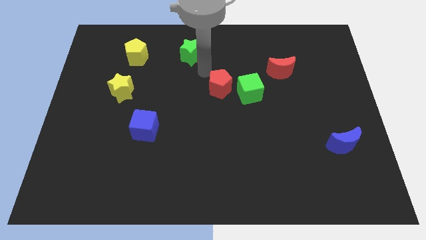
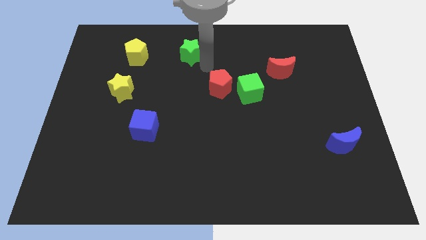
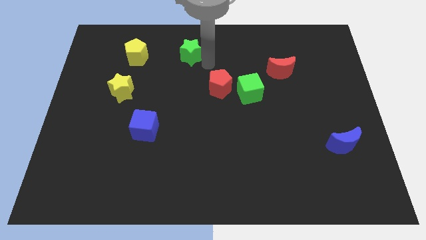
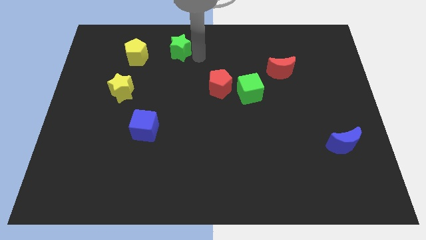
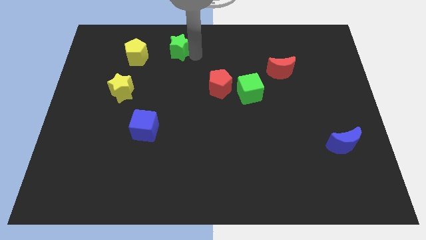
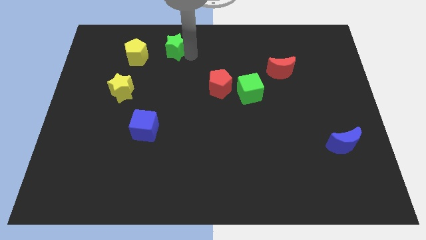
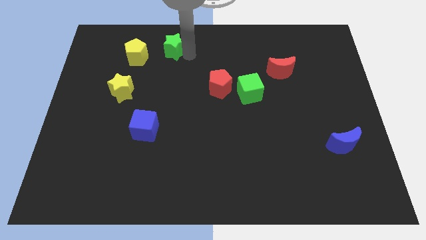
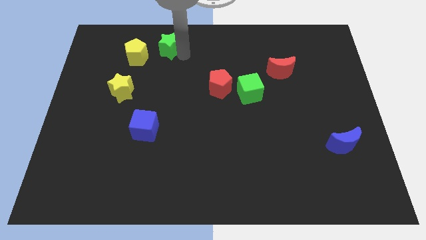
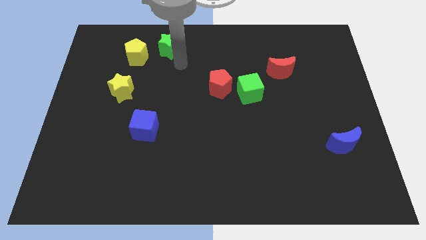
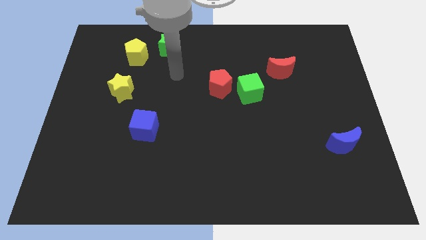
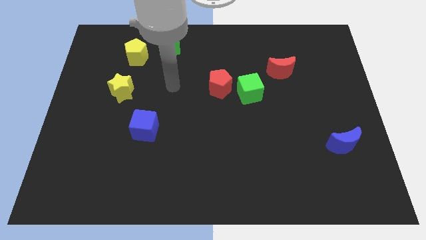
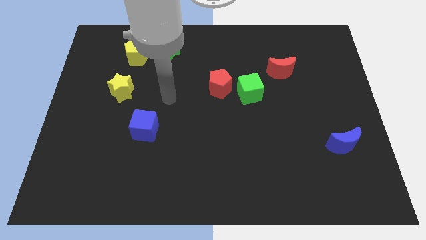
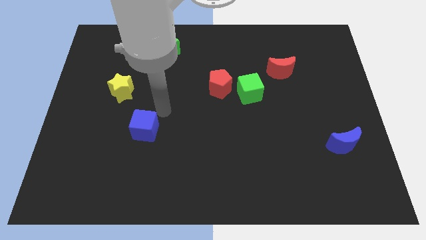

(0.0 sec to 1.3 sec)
push the green star parallel to the yellow pentagon

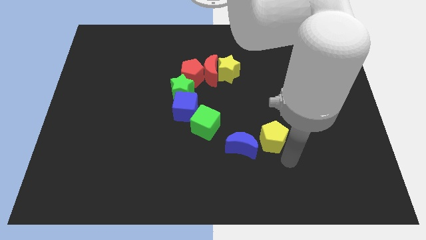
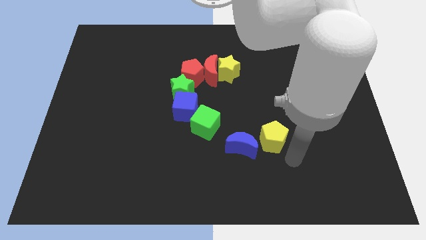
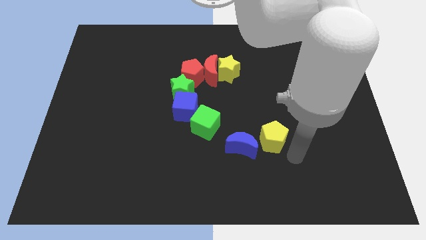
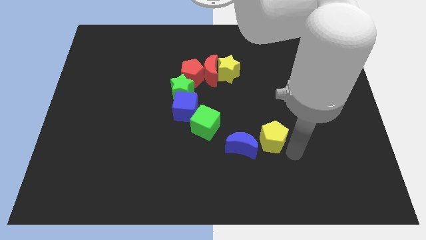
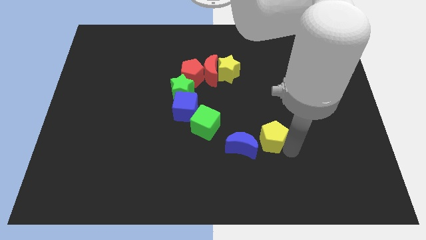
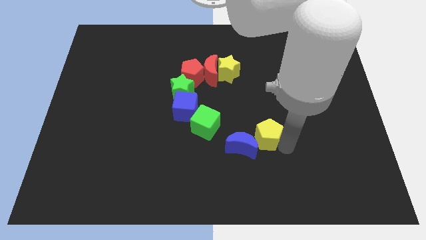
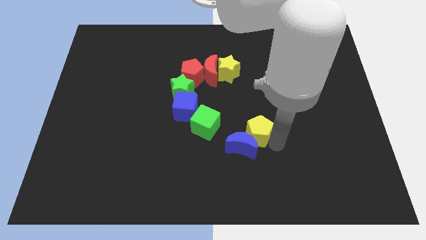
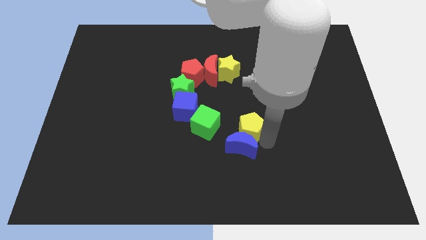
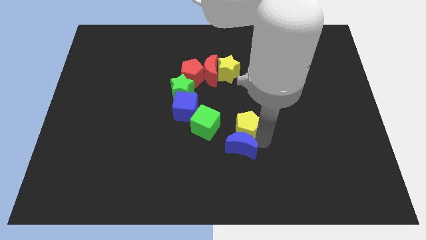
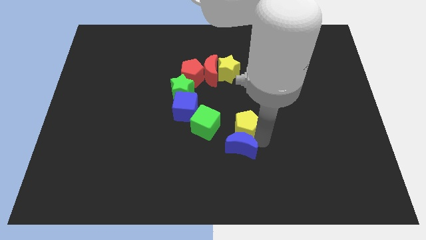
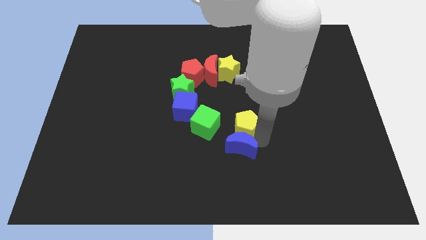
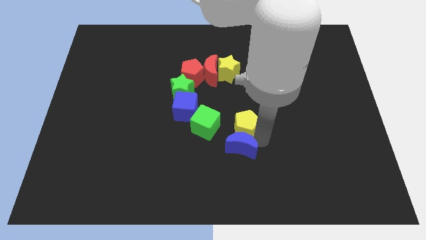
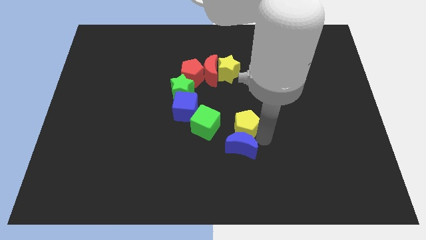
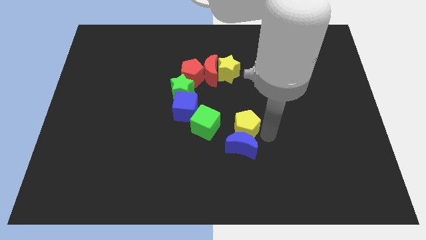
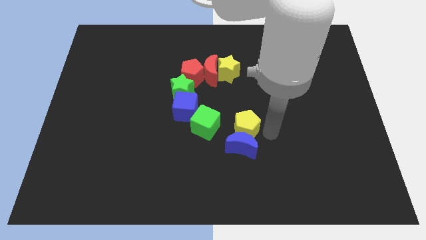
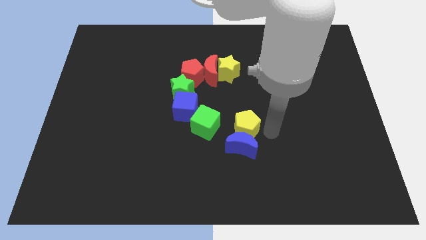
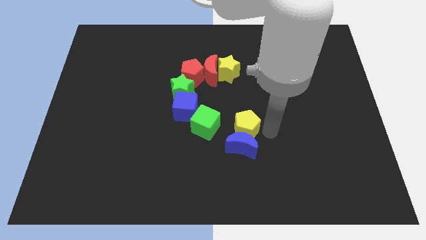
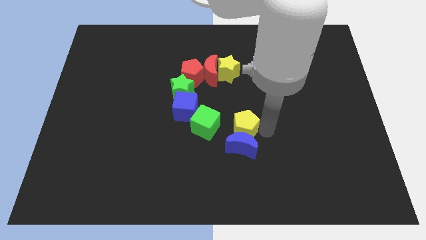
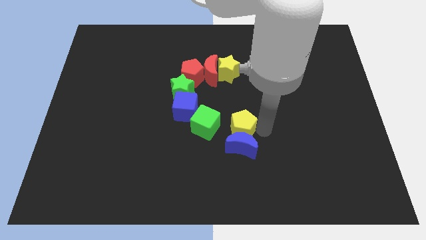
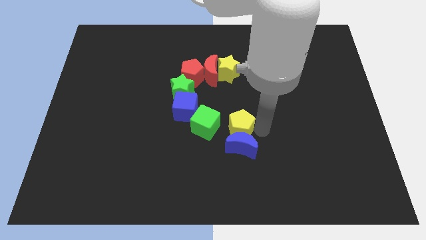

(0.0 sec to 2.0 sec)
push the yellow pentagon to the top side of the blue moon

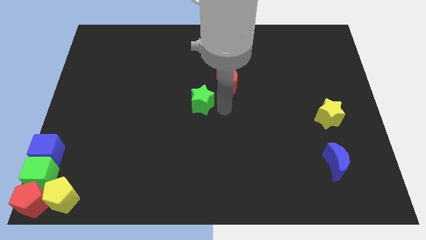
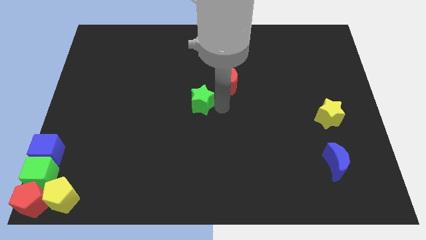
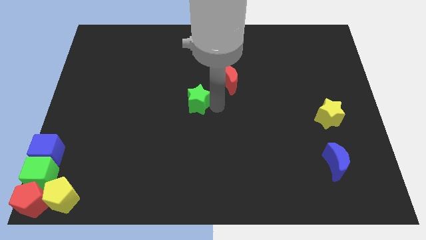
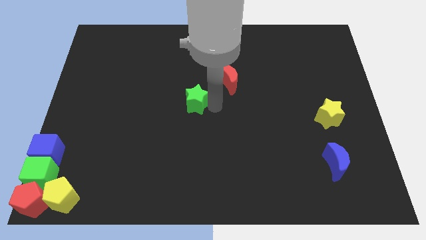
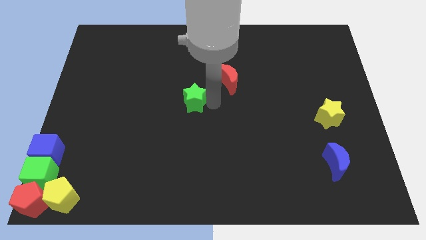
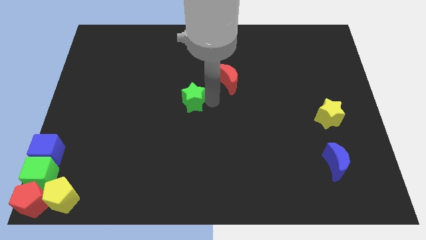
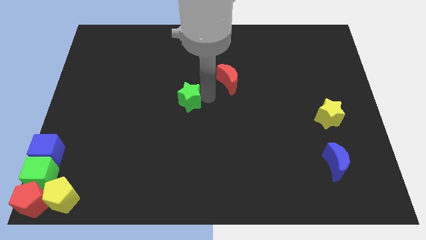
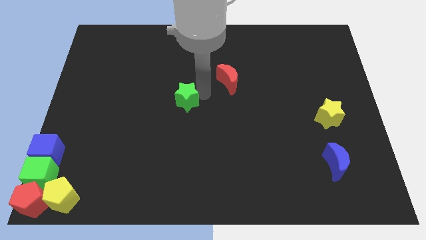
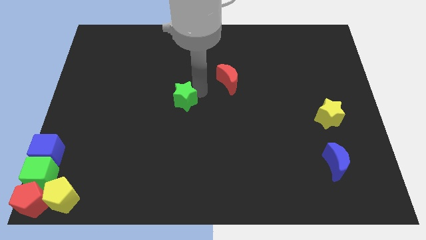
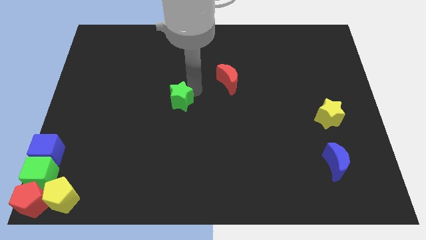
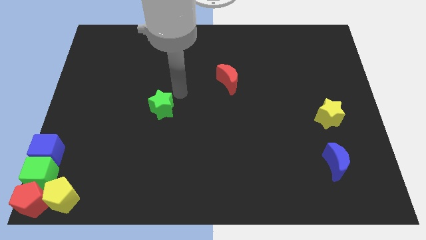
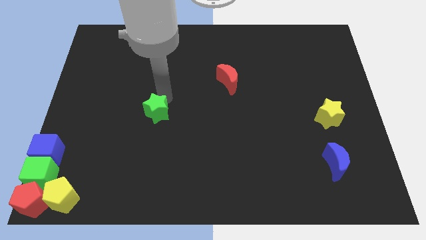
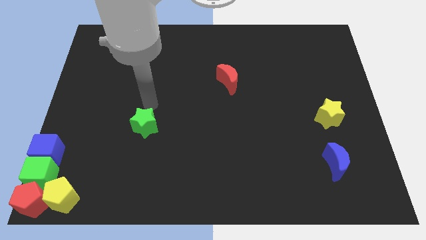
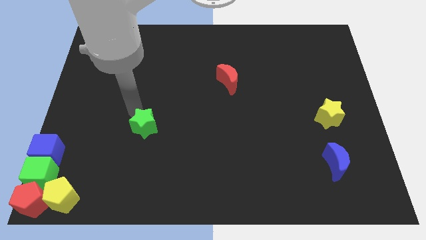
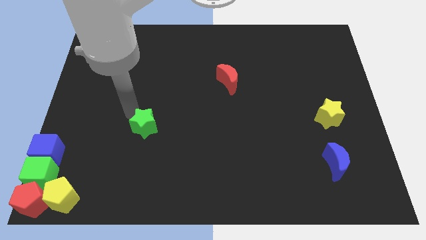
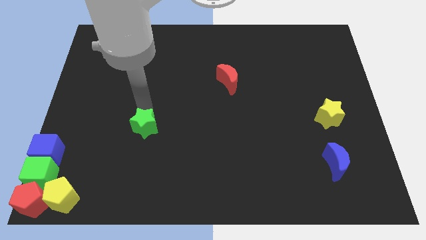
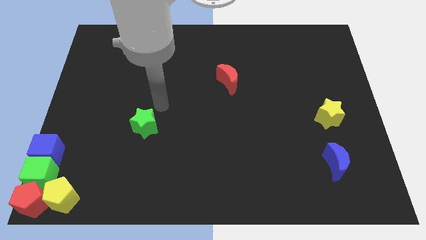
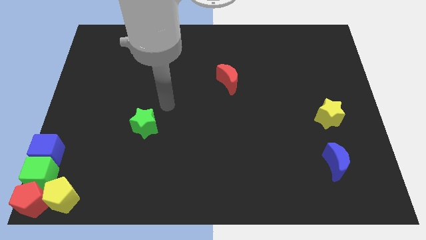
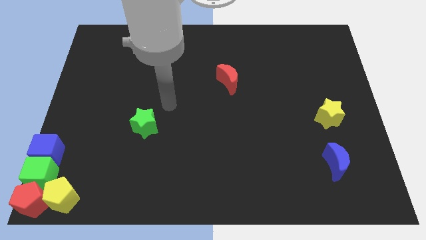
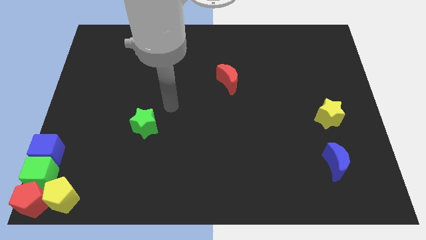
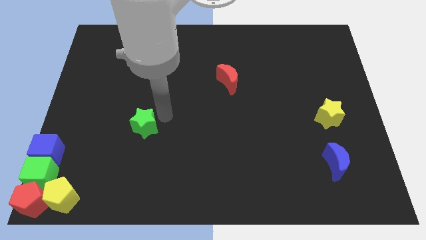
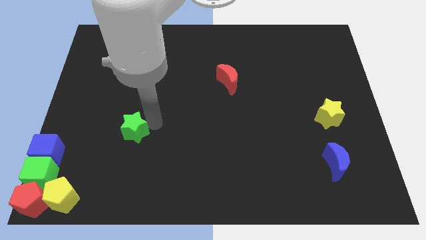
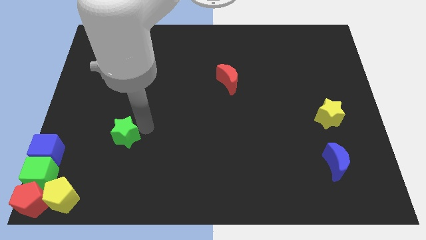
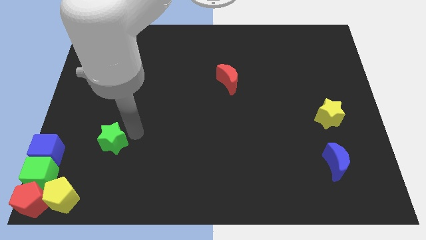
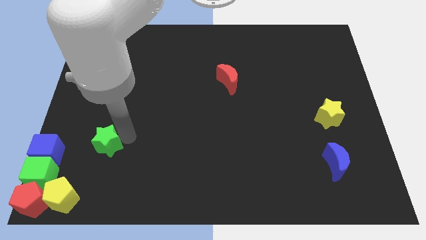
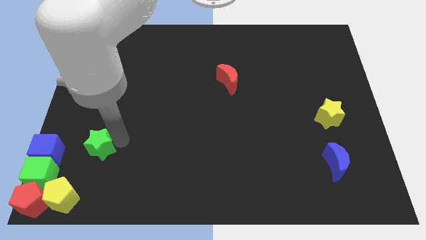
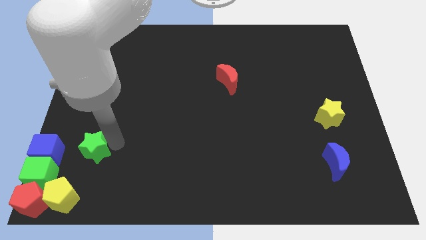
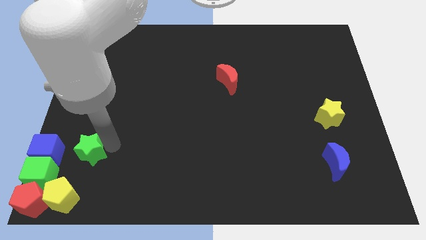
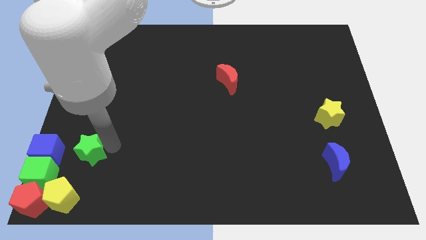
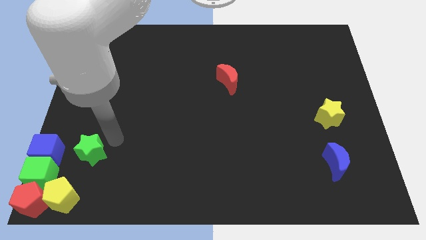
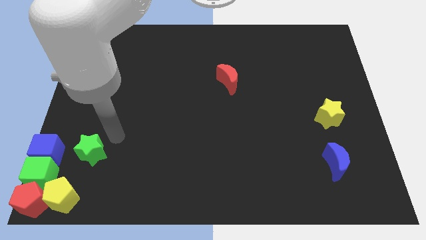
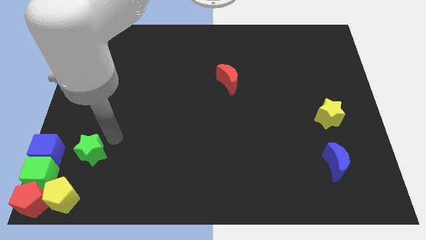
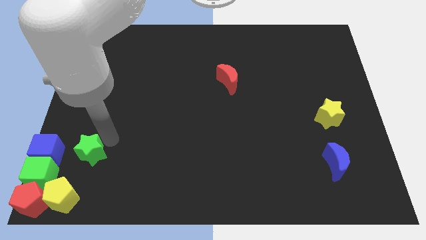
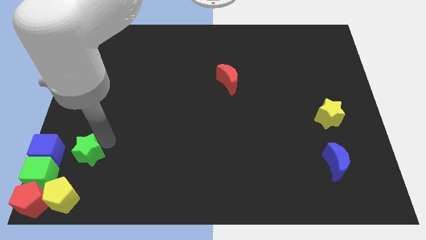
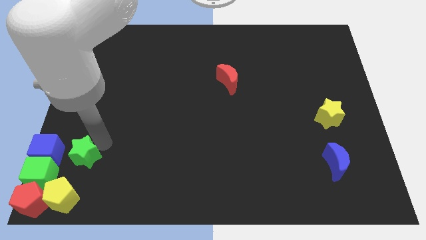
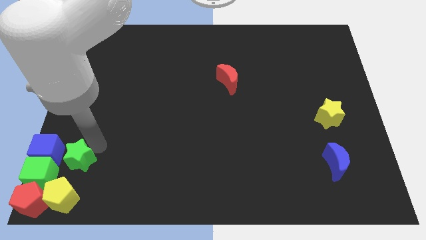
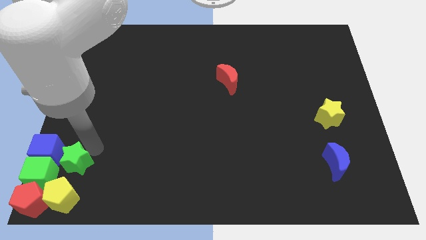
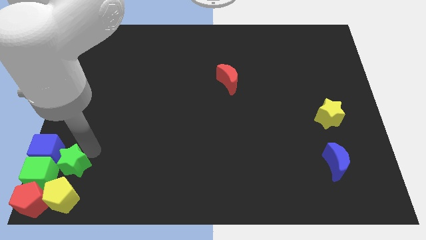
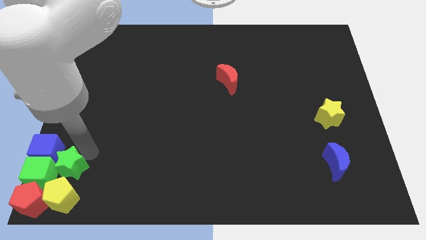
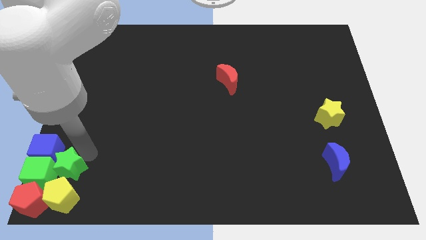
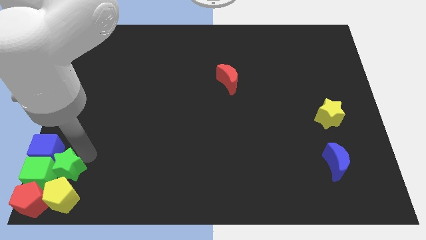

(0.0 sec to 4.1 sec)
place the green star above the yellow pentagon

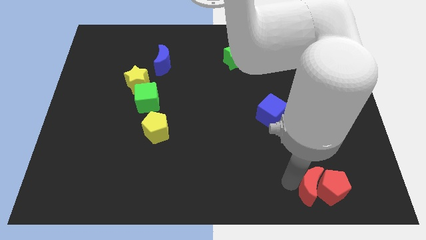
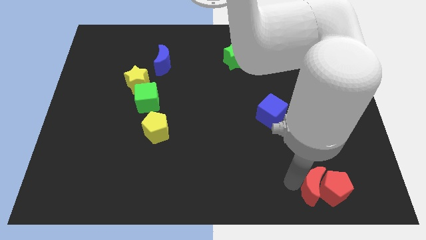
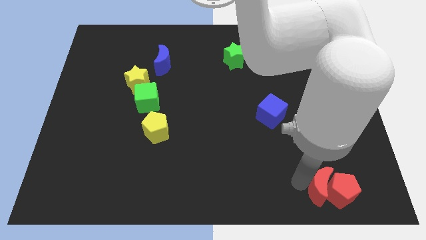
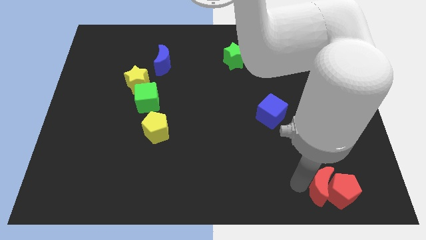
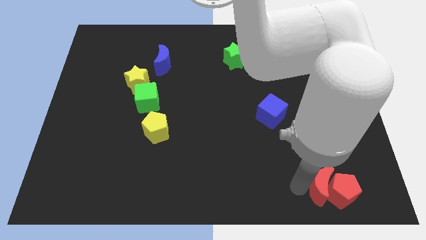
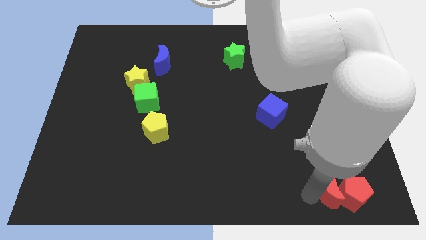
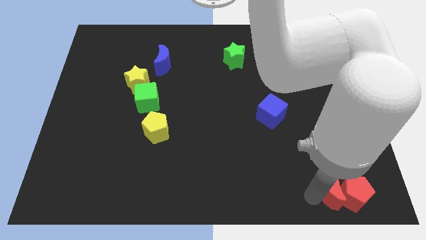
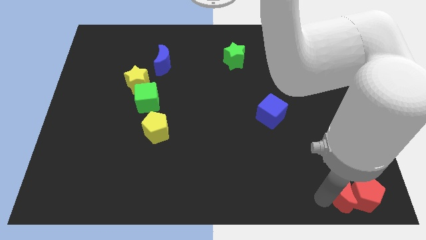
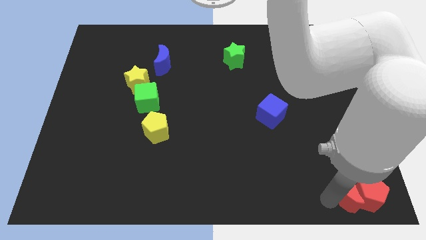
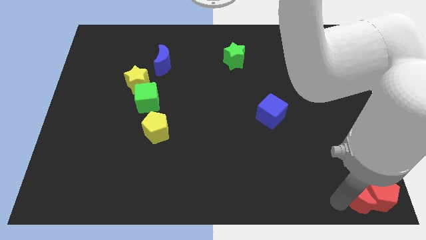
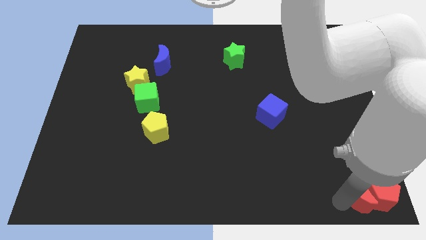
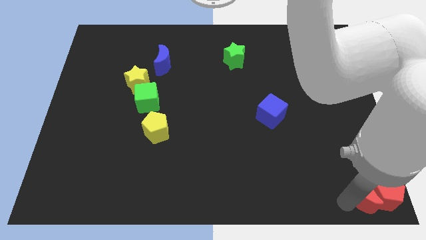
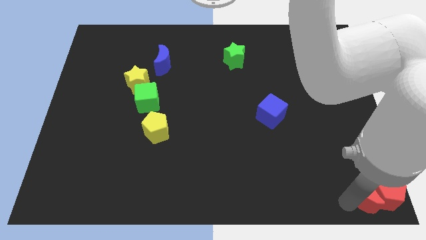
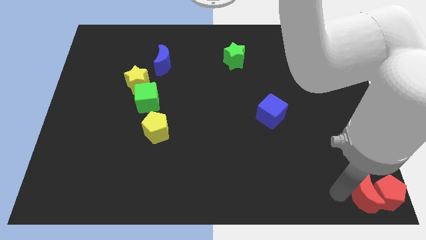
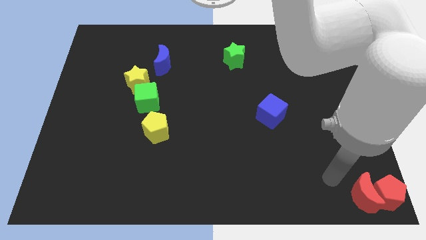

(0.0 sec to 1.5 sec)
move red crescent to the bottom right

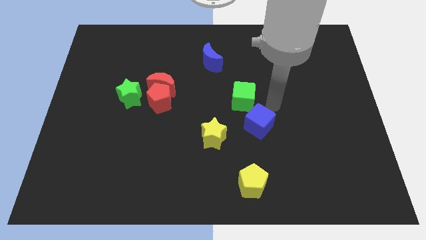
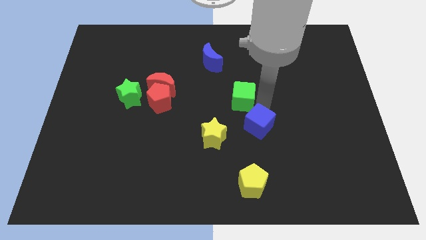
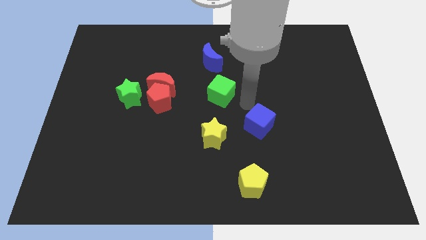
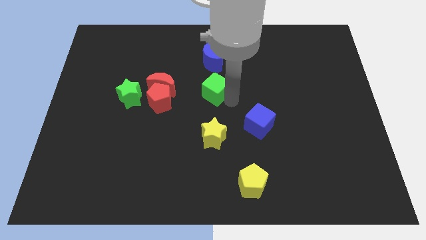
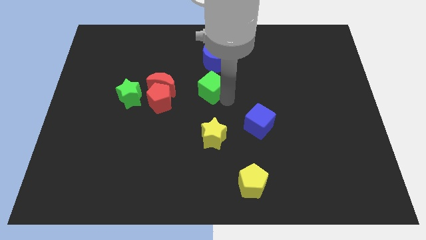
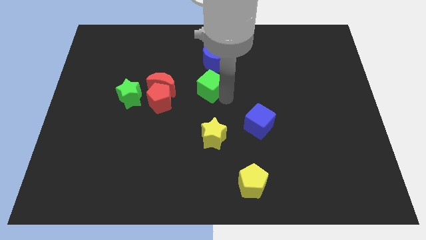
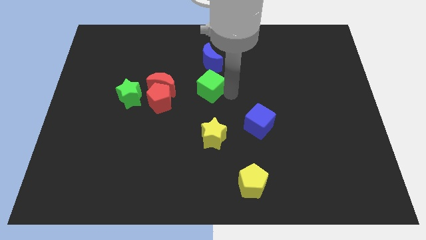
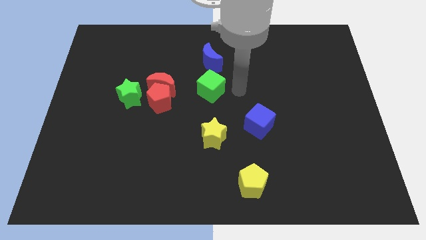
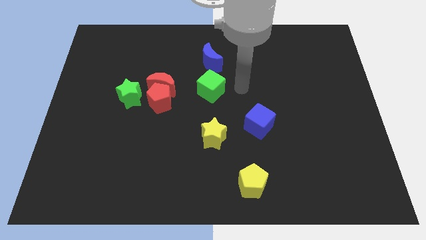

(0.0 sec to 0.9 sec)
move the green cube below the blue crescent
